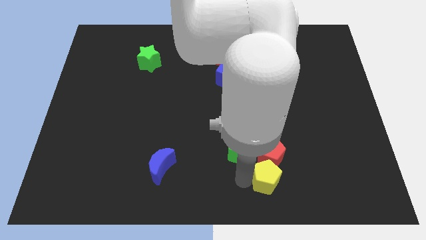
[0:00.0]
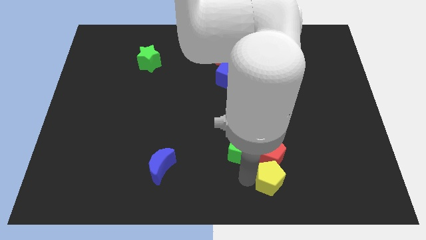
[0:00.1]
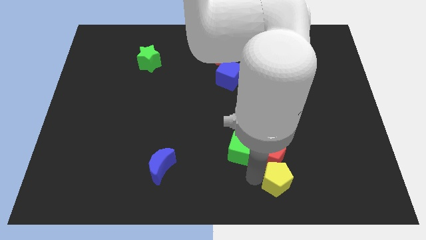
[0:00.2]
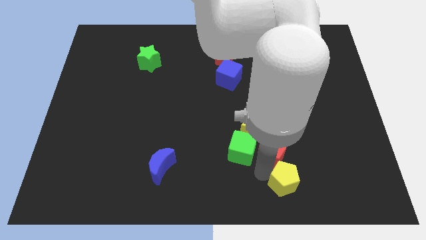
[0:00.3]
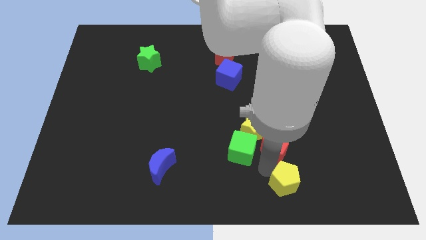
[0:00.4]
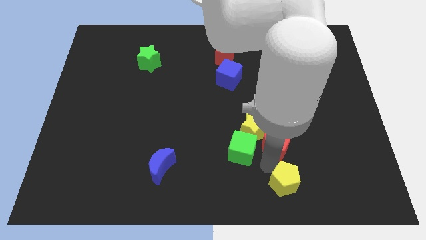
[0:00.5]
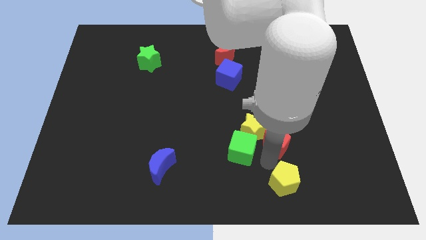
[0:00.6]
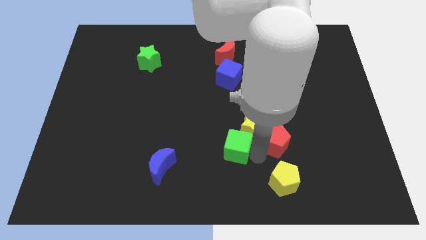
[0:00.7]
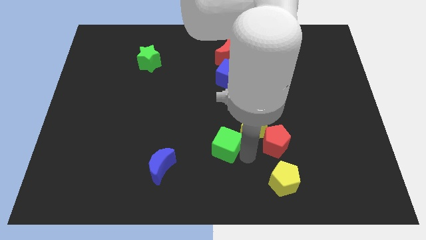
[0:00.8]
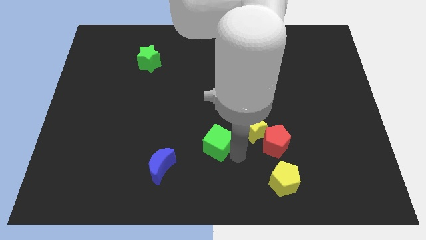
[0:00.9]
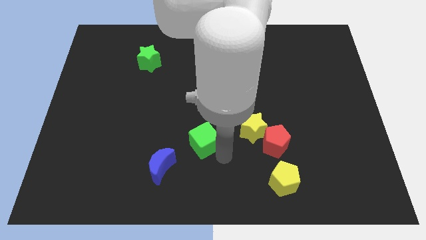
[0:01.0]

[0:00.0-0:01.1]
separate yellow pentagon and green cube

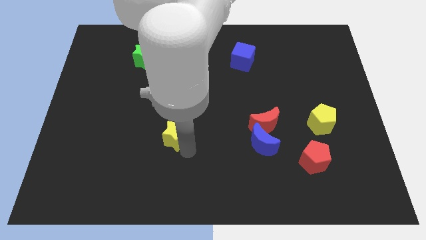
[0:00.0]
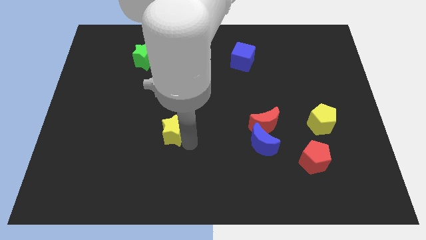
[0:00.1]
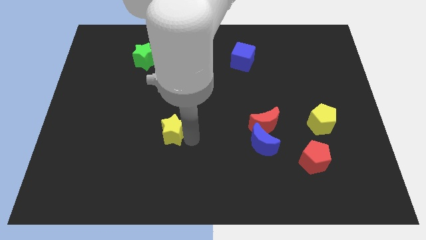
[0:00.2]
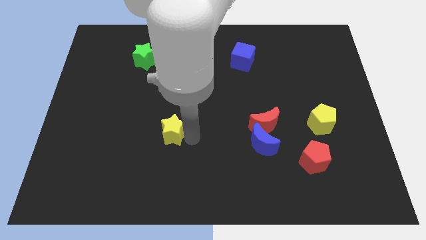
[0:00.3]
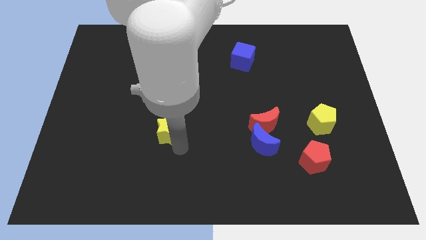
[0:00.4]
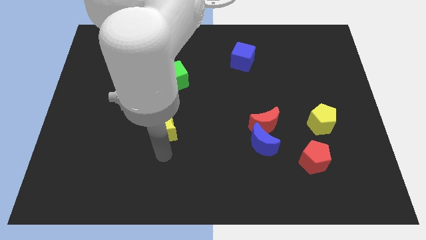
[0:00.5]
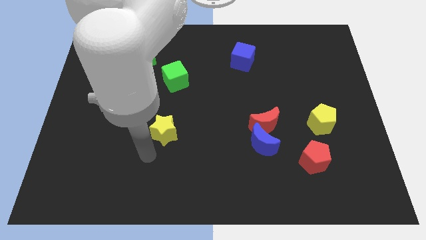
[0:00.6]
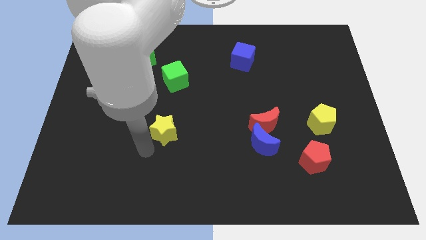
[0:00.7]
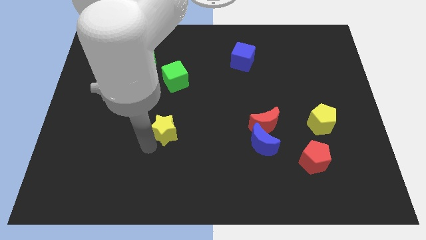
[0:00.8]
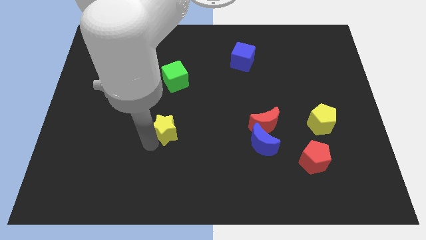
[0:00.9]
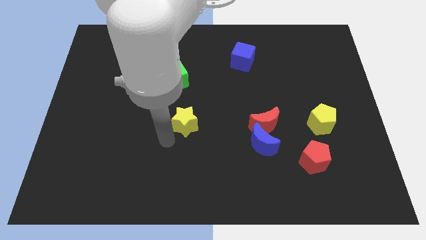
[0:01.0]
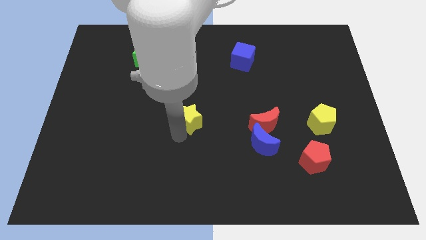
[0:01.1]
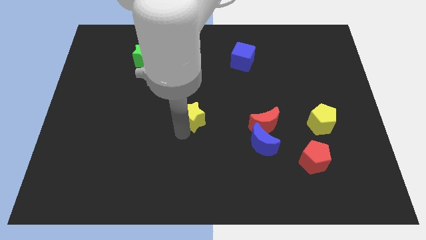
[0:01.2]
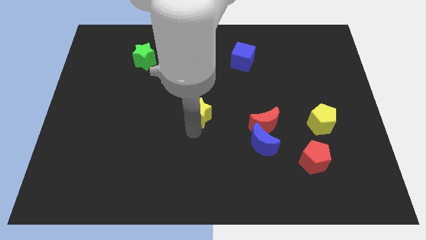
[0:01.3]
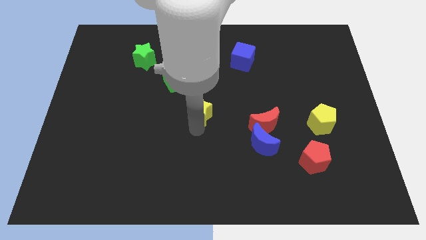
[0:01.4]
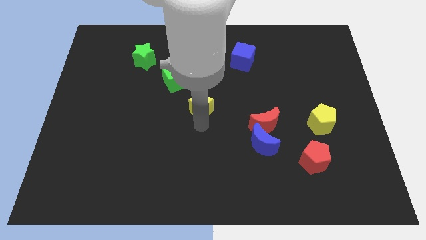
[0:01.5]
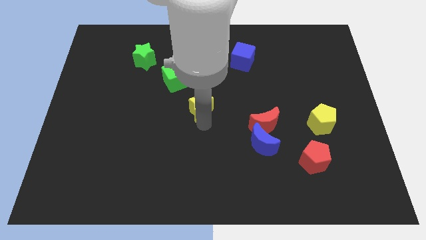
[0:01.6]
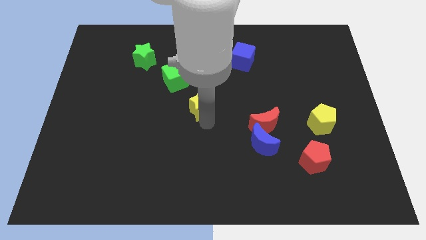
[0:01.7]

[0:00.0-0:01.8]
place the yellow star in between blue crescent and green cube

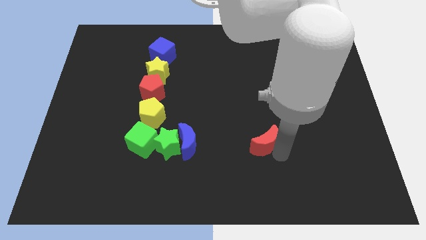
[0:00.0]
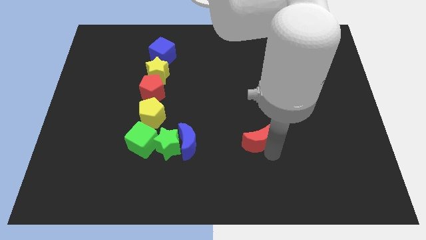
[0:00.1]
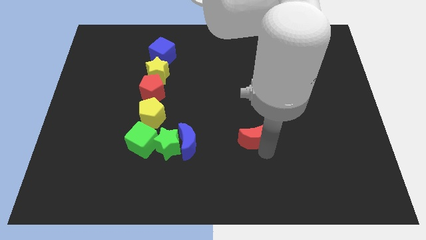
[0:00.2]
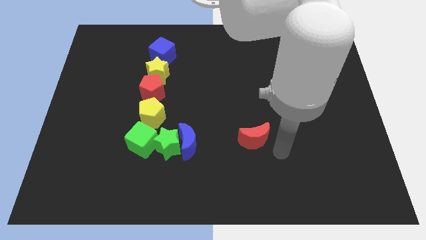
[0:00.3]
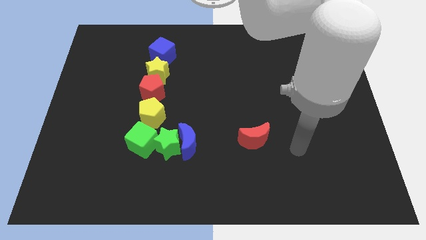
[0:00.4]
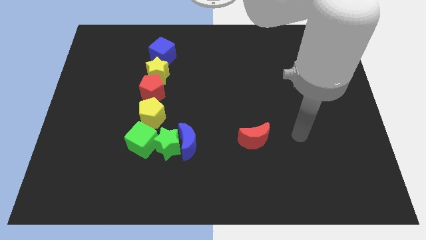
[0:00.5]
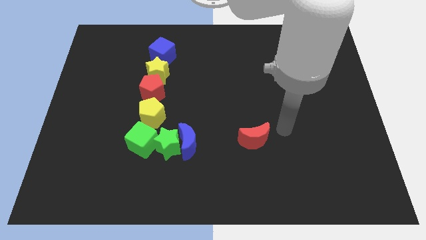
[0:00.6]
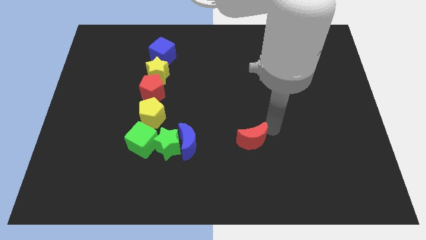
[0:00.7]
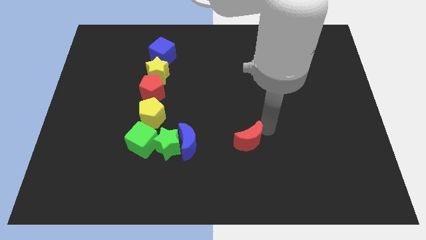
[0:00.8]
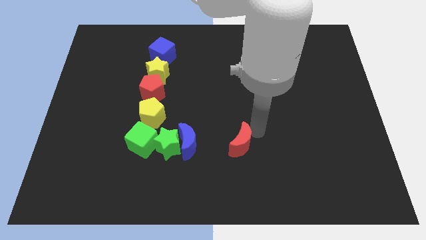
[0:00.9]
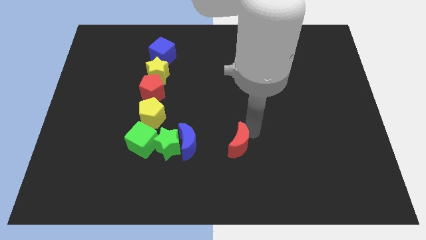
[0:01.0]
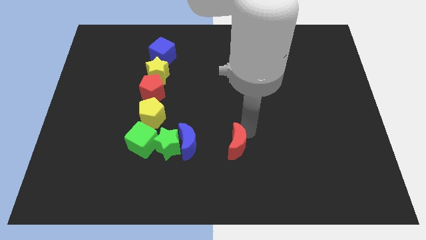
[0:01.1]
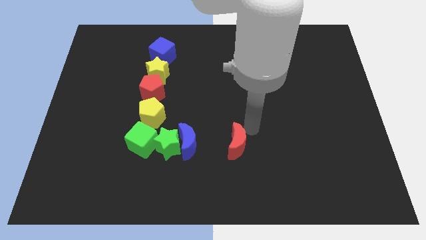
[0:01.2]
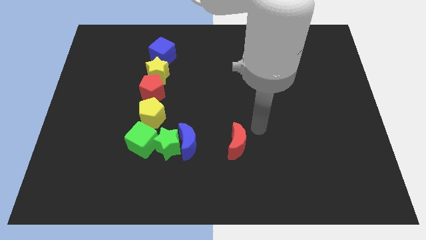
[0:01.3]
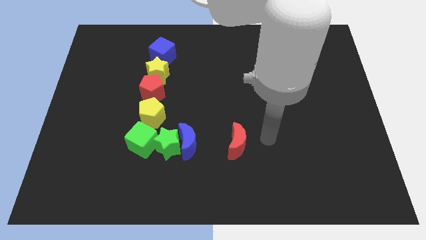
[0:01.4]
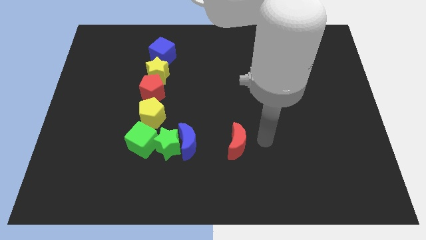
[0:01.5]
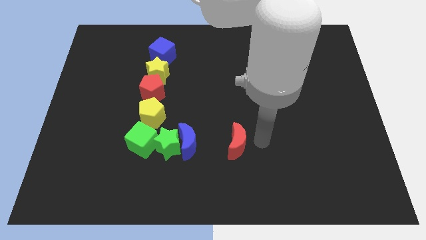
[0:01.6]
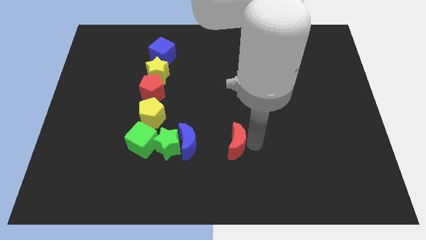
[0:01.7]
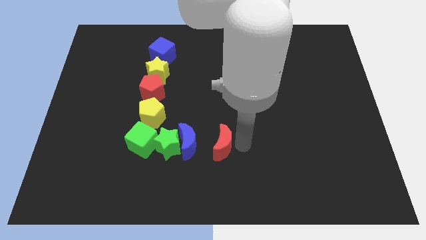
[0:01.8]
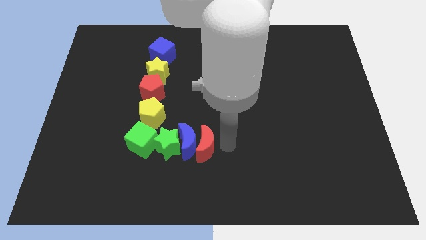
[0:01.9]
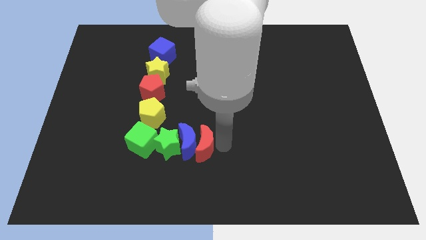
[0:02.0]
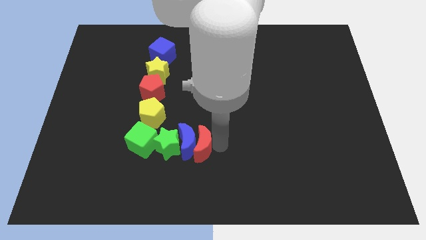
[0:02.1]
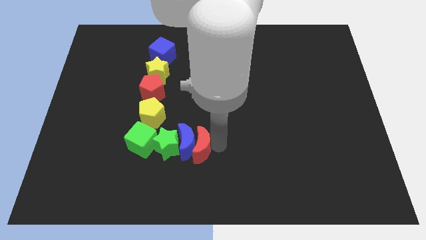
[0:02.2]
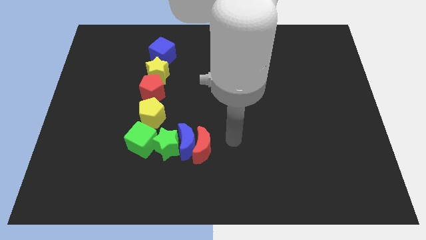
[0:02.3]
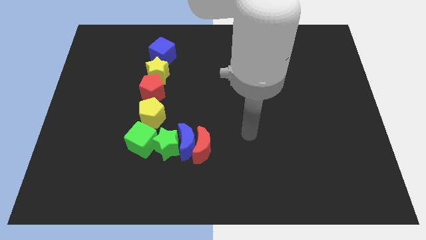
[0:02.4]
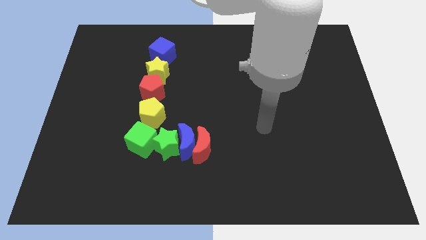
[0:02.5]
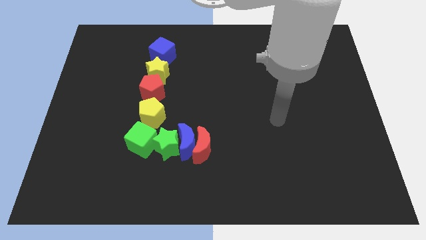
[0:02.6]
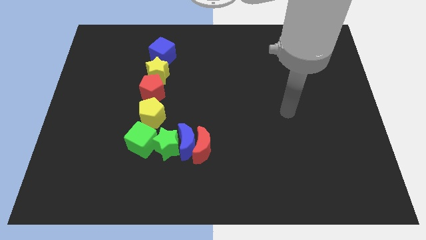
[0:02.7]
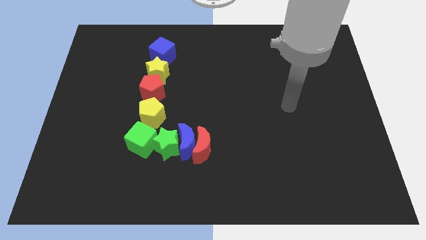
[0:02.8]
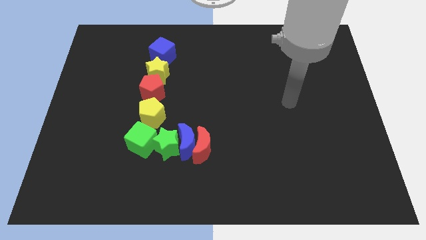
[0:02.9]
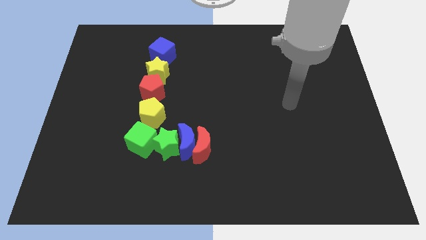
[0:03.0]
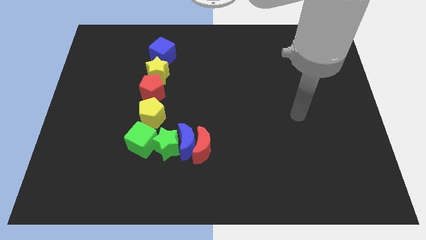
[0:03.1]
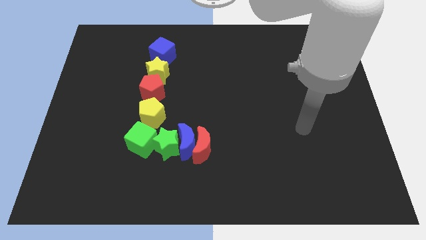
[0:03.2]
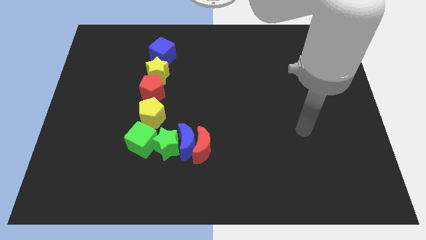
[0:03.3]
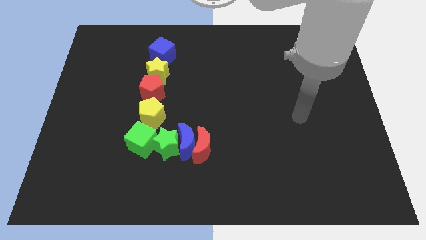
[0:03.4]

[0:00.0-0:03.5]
slide the red crescent into the right side of the blue crescent

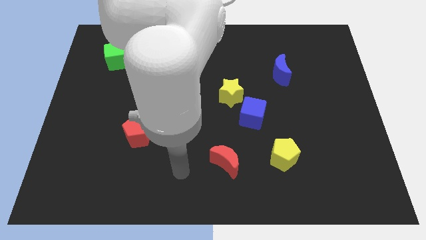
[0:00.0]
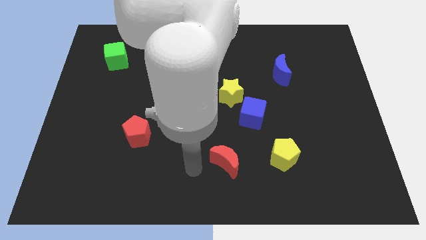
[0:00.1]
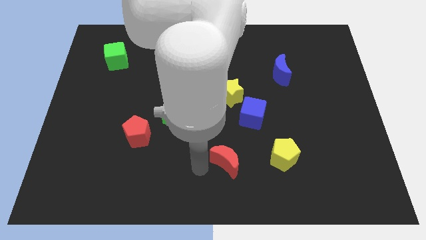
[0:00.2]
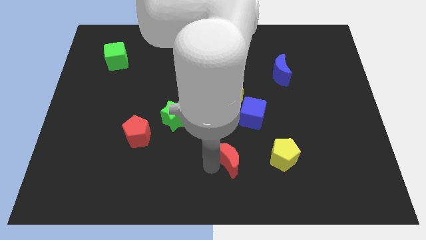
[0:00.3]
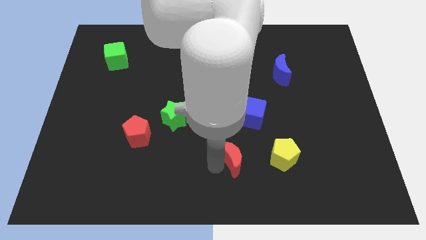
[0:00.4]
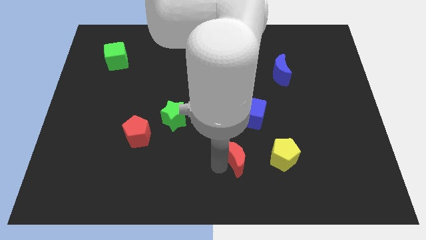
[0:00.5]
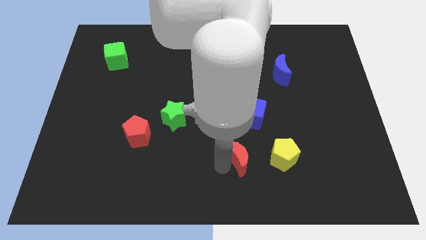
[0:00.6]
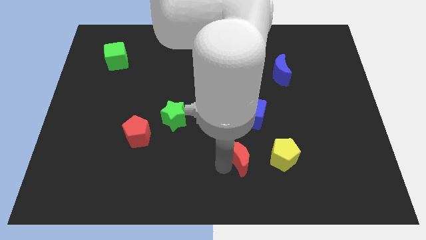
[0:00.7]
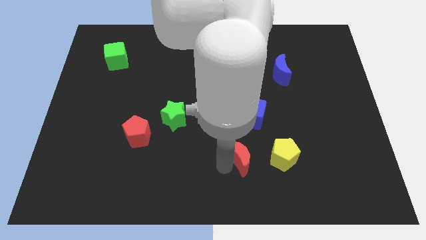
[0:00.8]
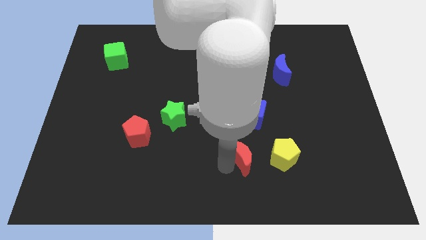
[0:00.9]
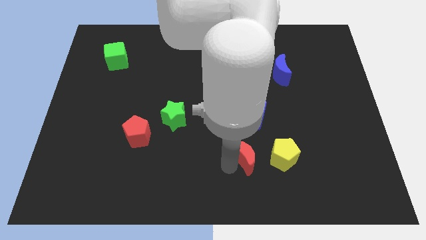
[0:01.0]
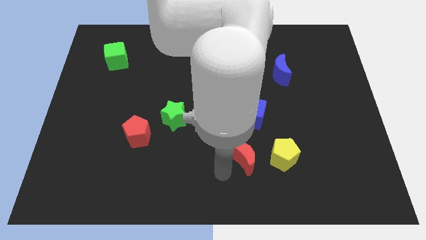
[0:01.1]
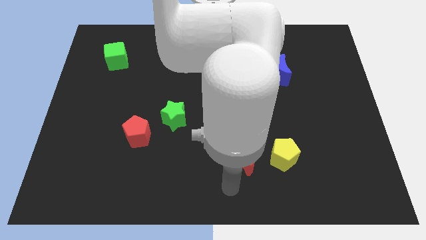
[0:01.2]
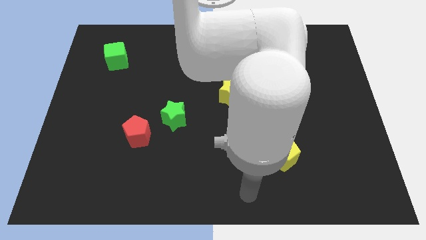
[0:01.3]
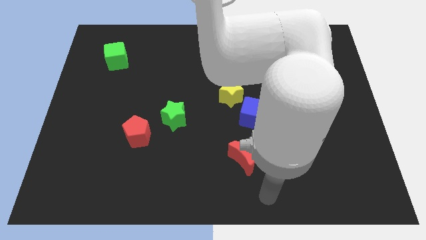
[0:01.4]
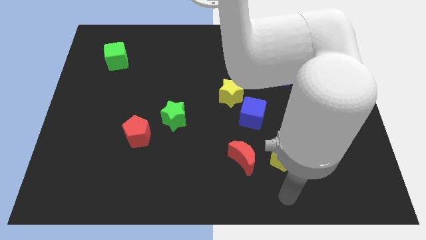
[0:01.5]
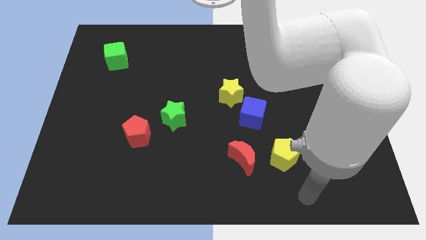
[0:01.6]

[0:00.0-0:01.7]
push the red crescent to the left of the yellow pentagon

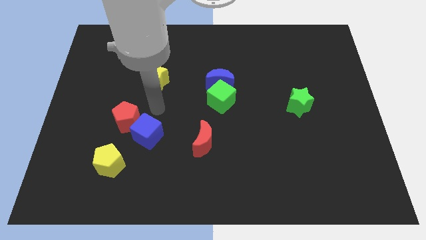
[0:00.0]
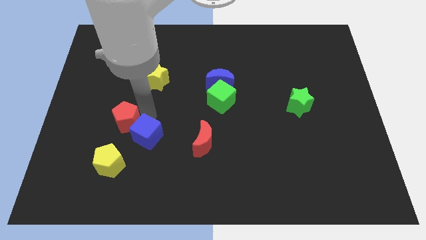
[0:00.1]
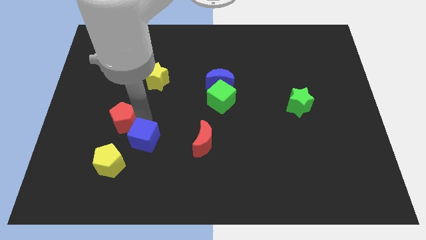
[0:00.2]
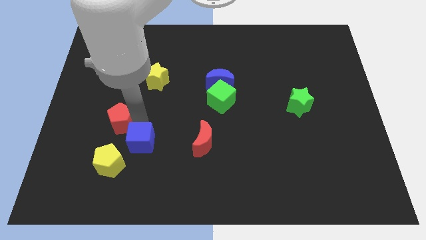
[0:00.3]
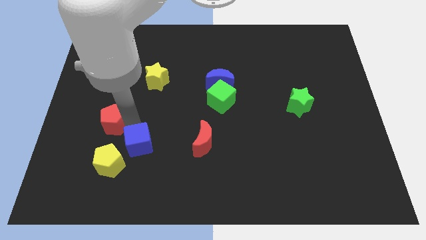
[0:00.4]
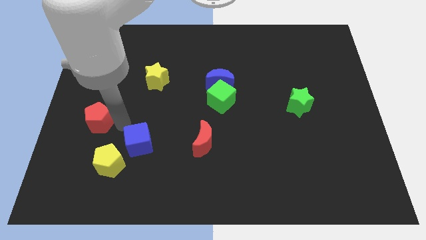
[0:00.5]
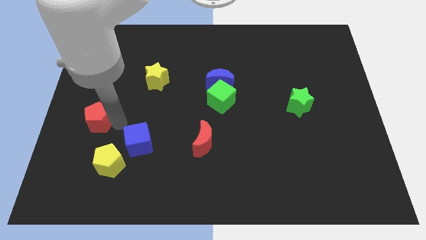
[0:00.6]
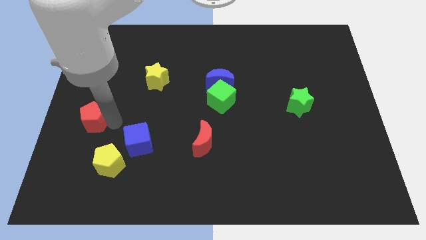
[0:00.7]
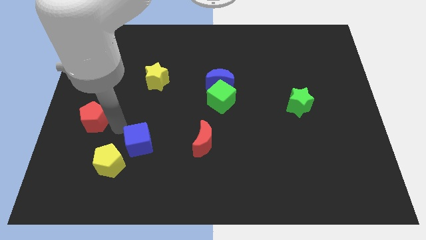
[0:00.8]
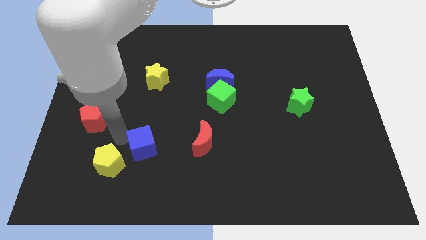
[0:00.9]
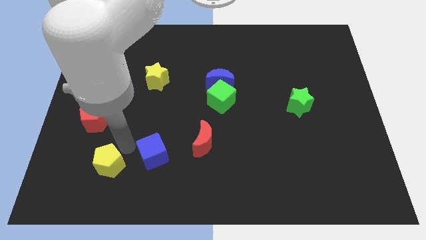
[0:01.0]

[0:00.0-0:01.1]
put the blue cube between the yellow pentagon and red moon
